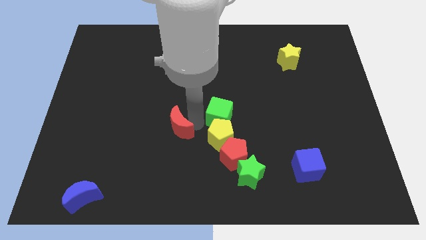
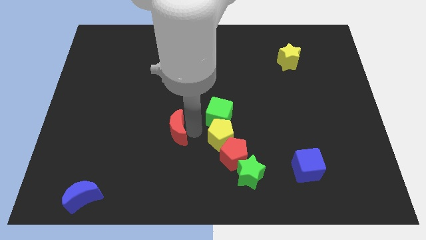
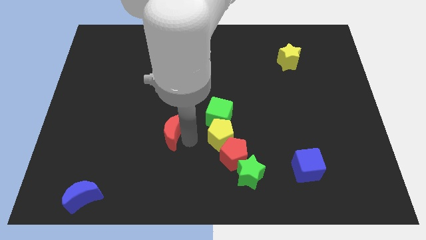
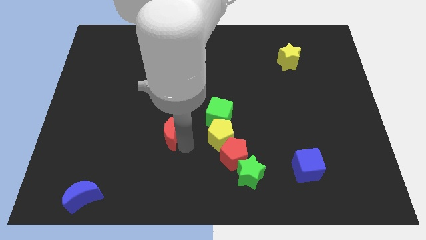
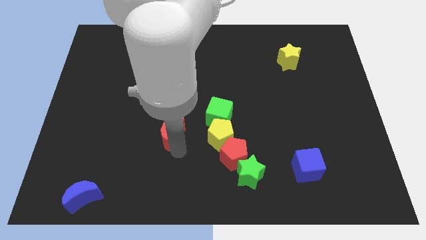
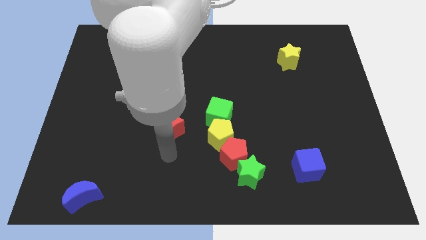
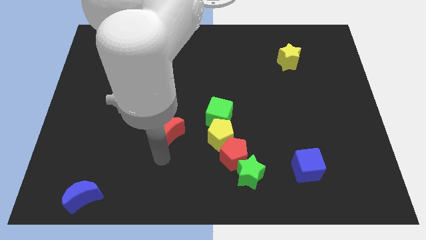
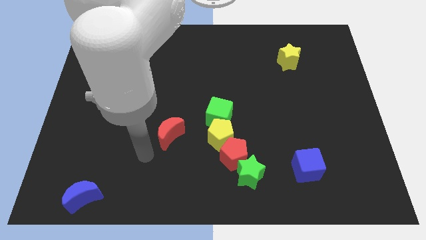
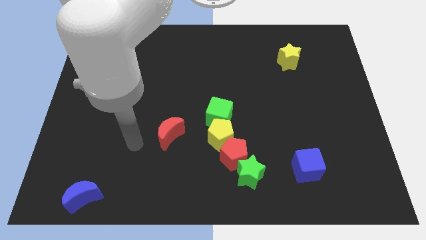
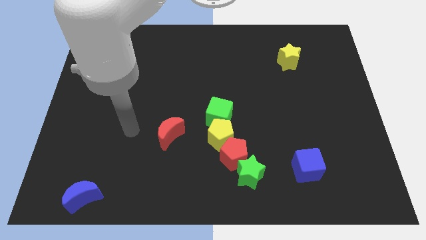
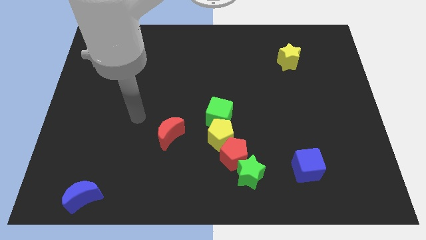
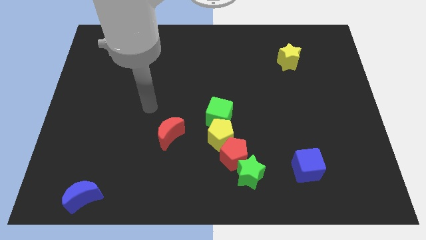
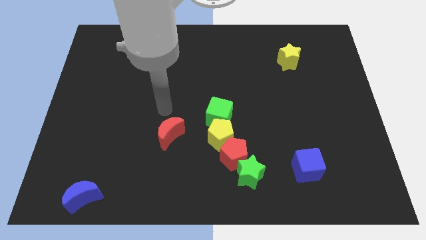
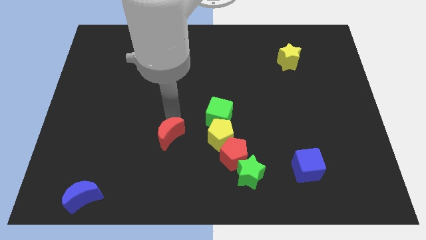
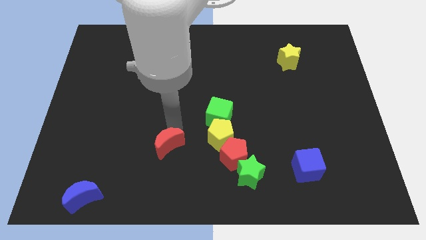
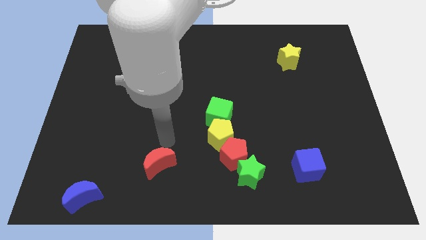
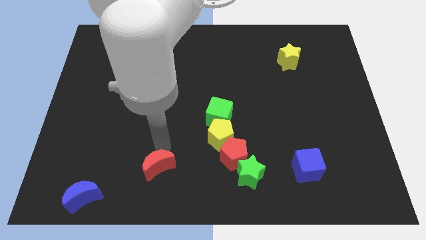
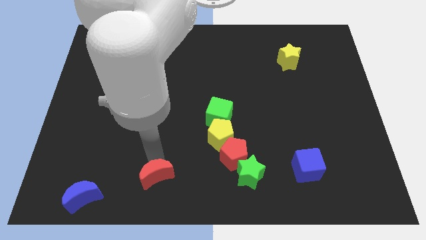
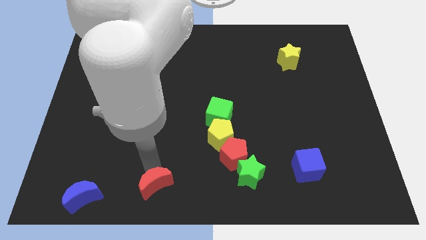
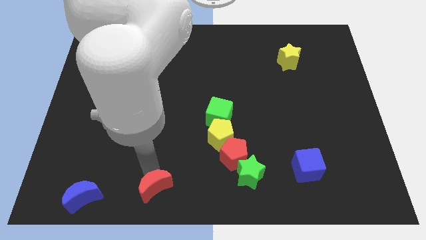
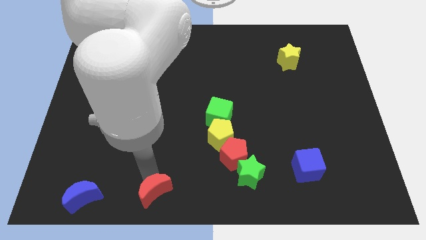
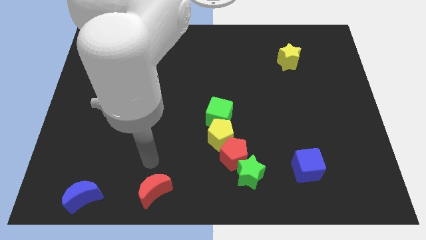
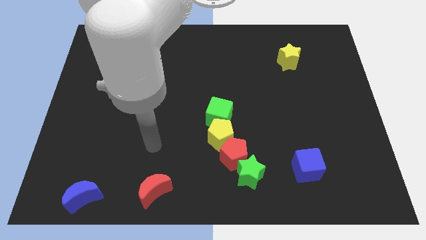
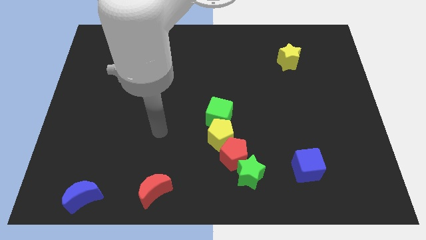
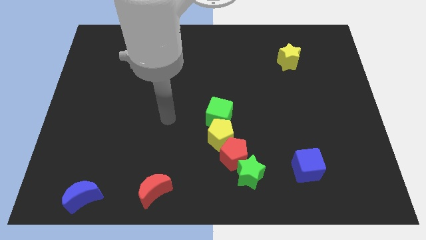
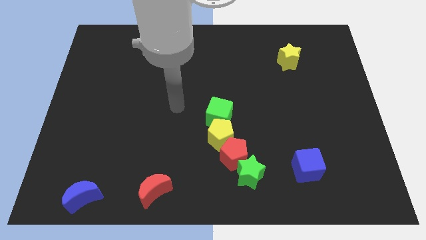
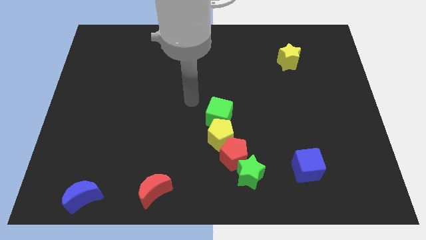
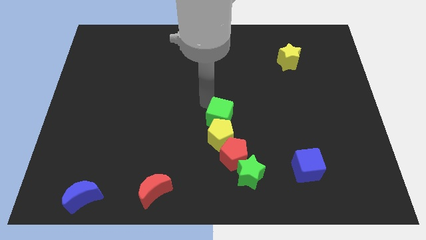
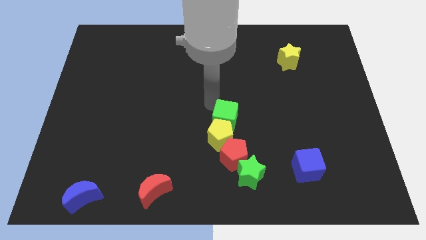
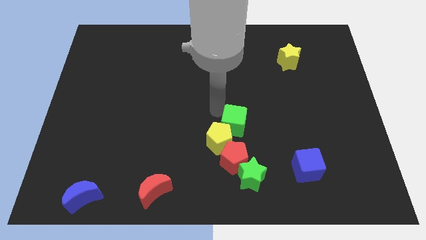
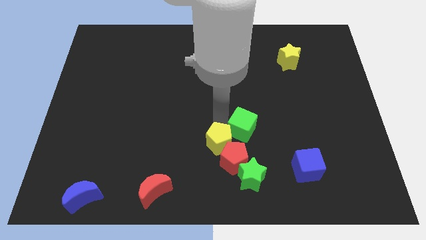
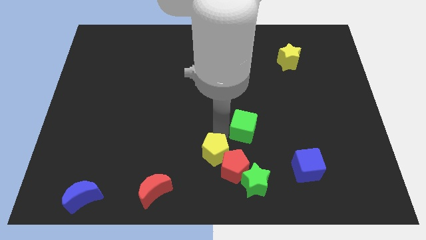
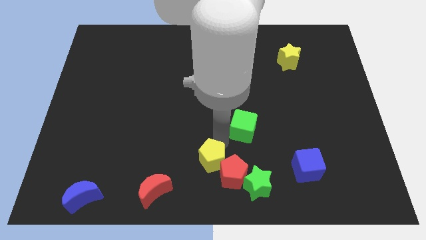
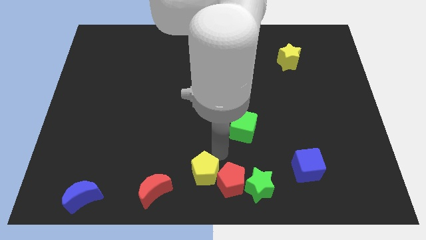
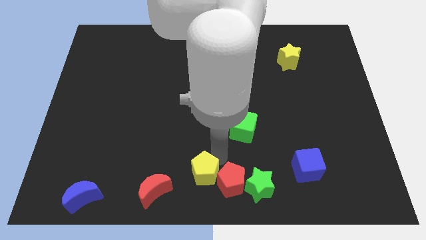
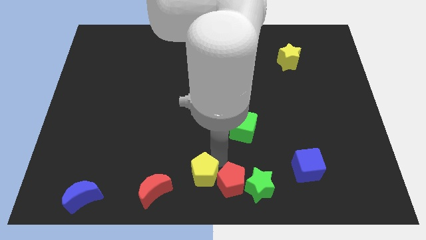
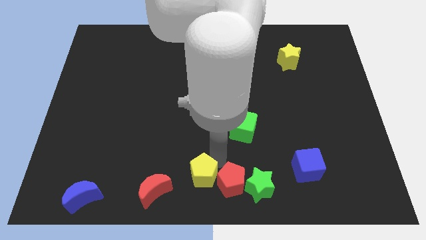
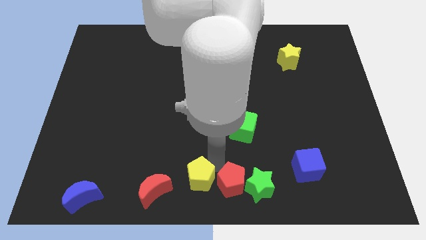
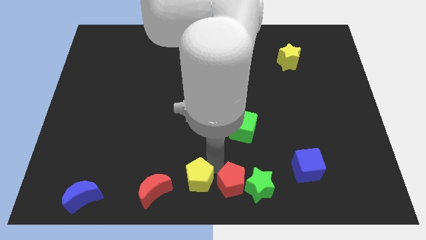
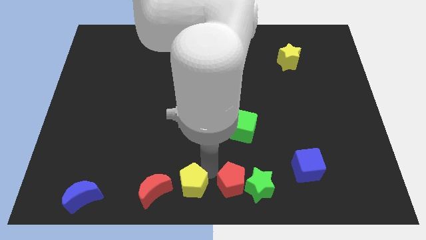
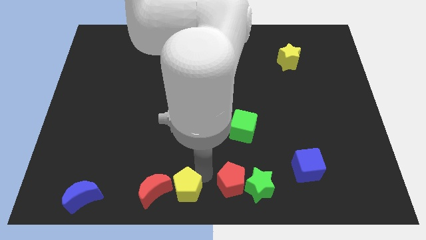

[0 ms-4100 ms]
drag the red moon slightly downwards

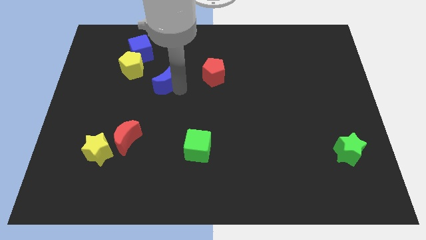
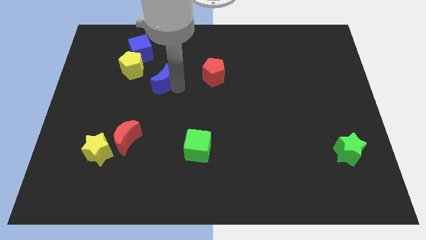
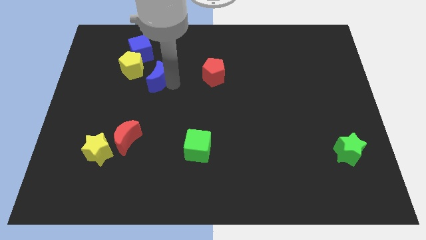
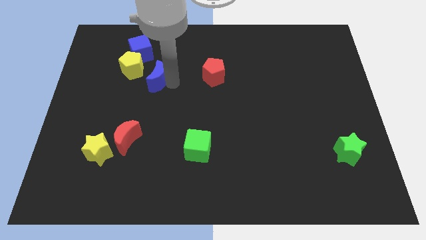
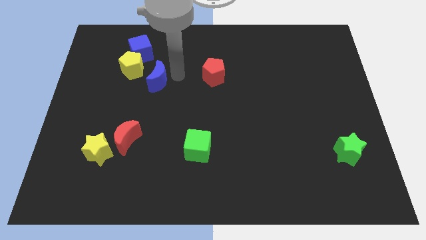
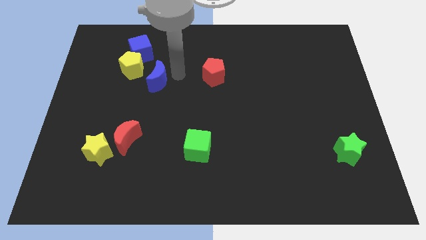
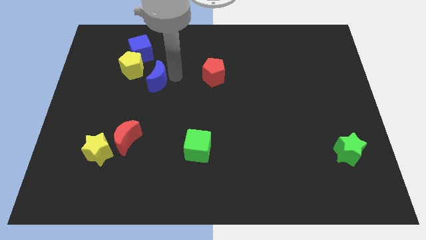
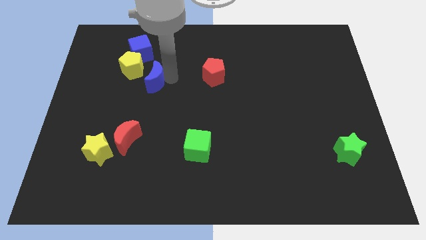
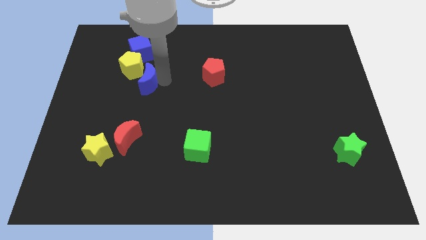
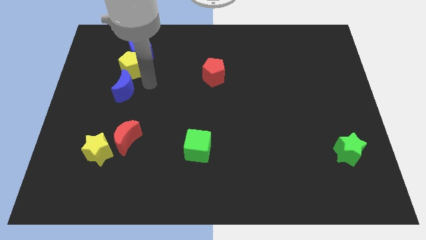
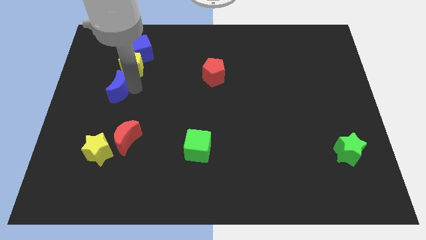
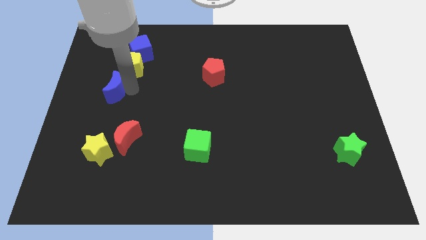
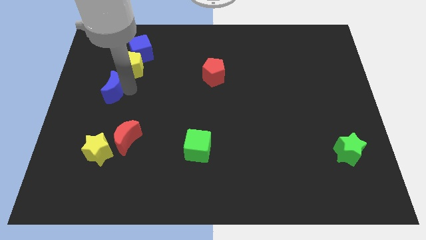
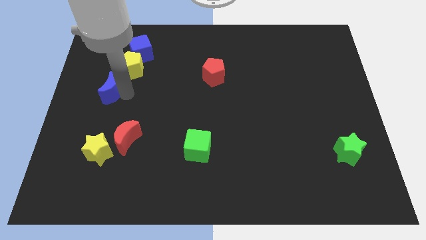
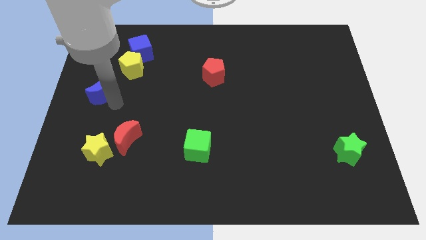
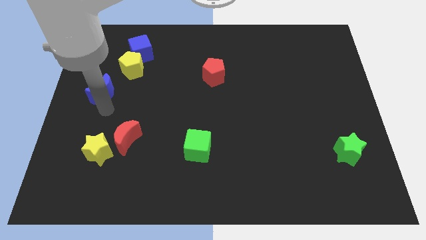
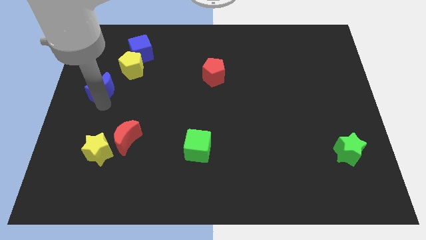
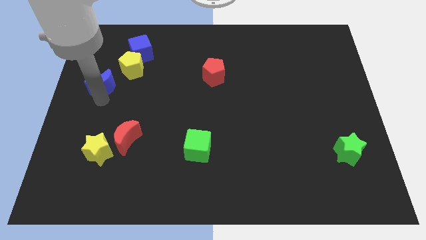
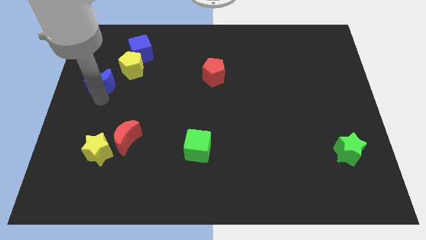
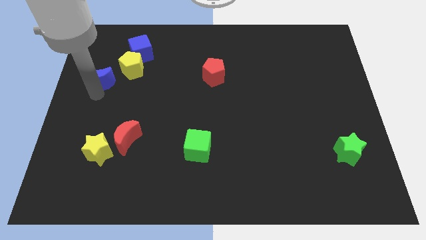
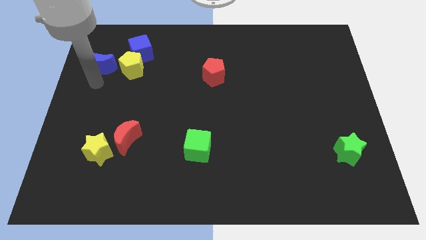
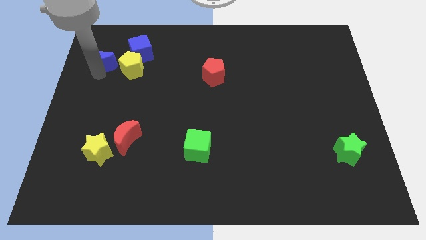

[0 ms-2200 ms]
move the blue moon left to the yellow pentagon

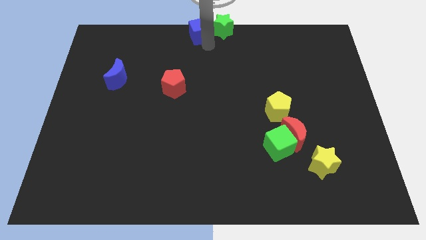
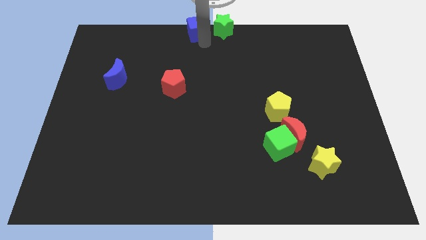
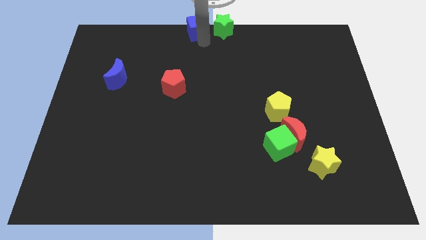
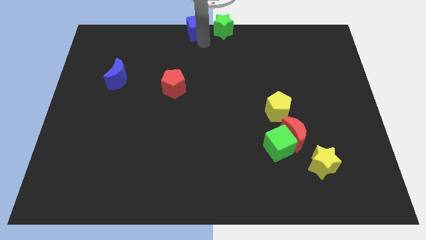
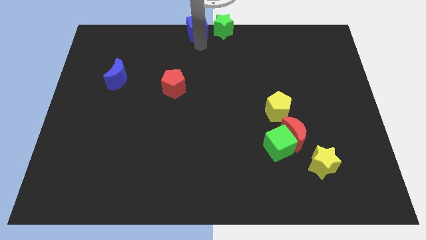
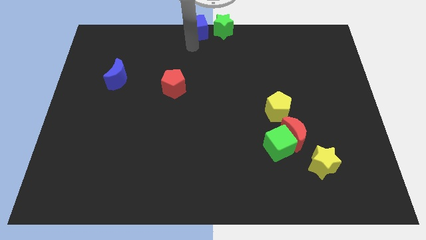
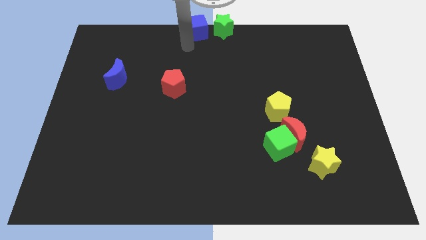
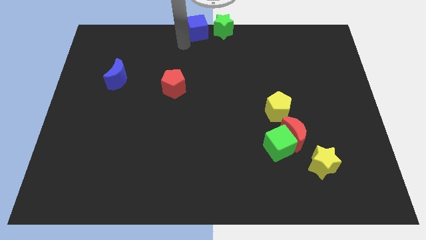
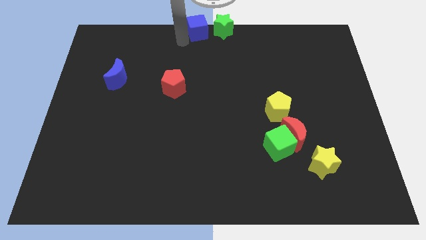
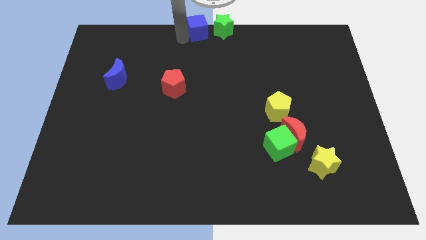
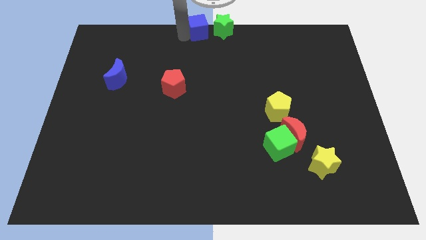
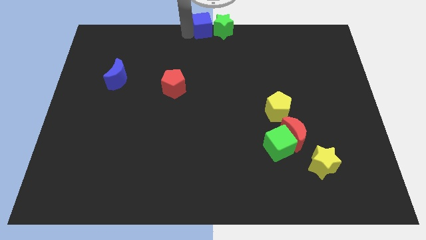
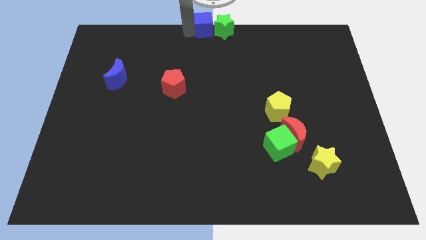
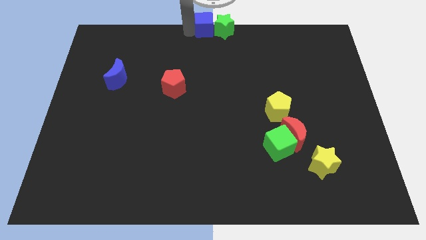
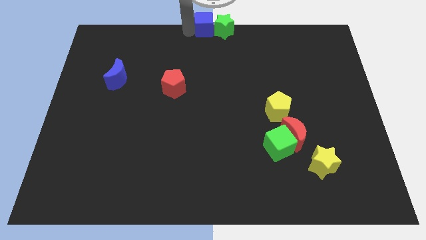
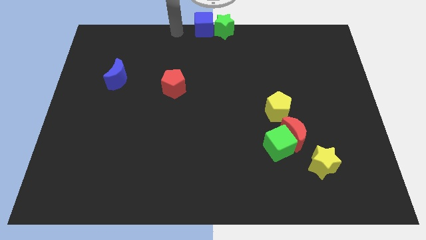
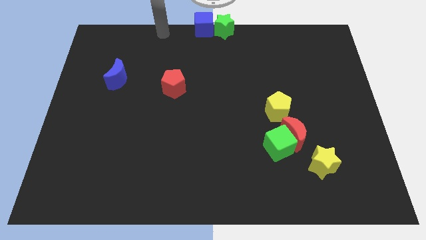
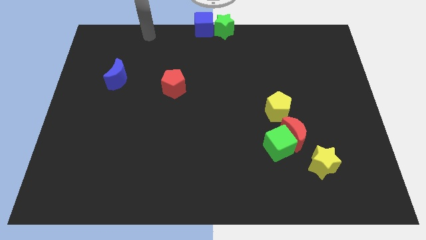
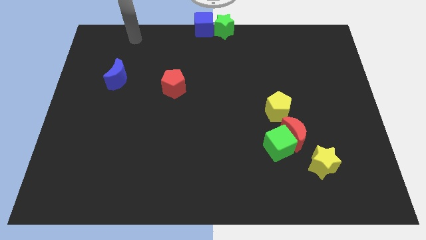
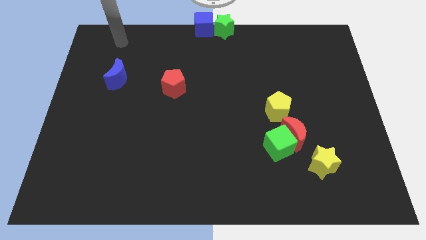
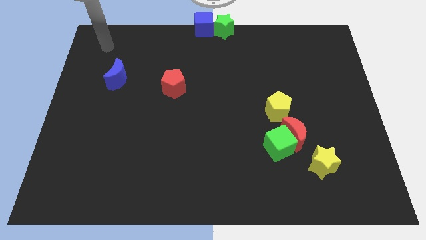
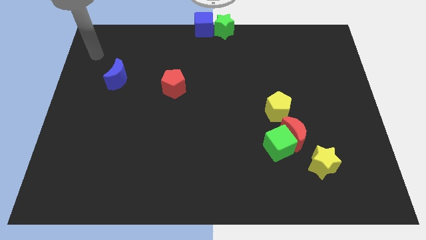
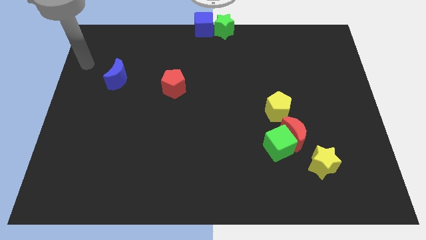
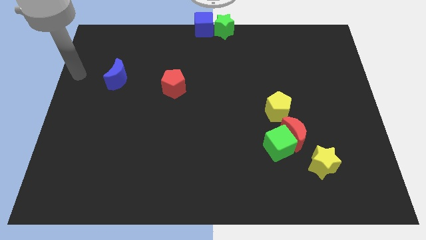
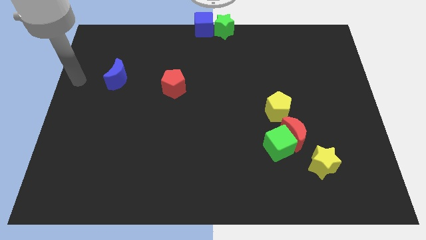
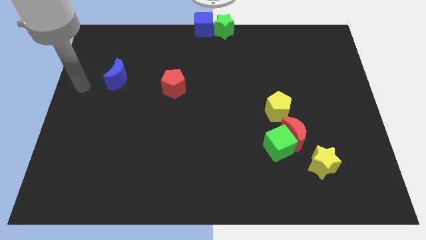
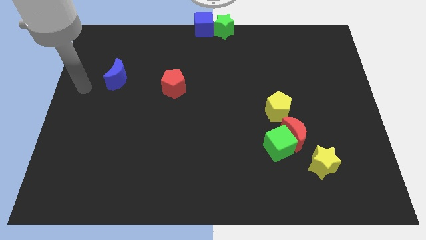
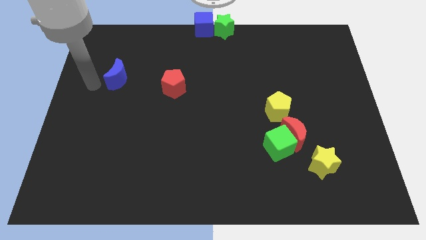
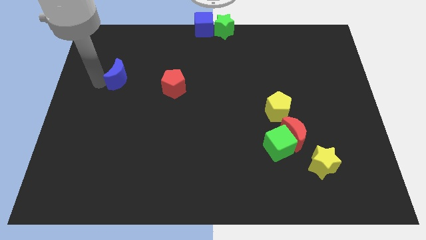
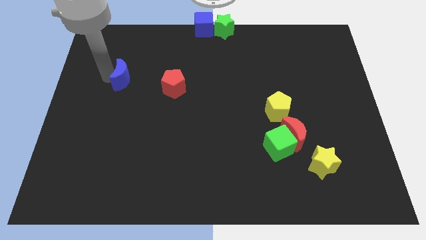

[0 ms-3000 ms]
push the blue cube into green star
